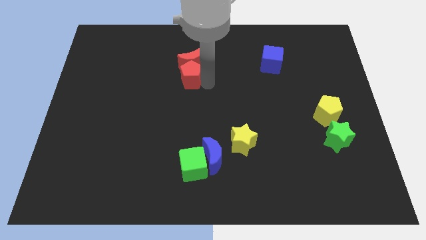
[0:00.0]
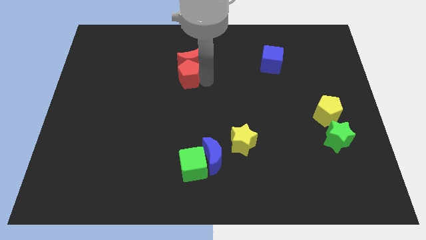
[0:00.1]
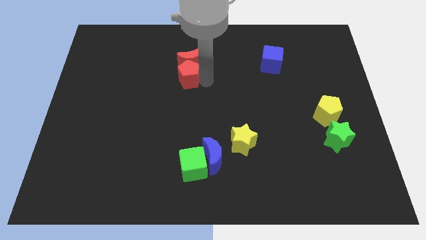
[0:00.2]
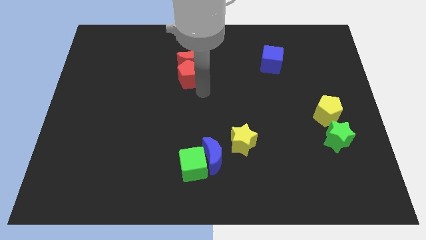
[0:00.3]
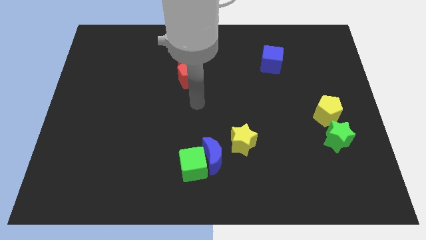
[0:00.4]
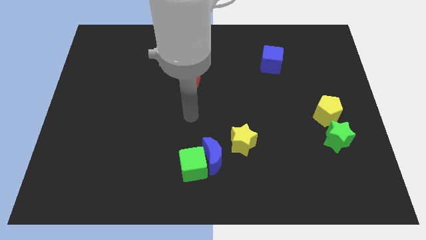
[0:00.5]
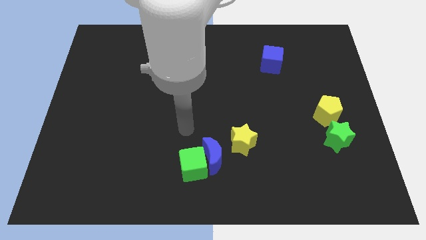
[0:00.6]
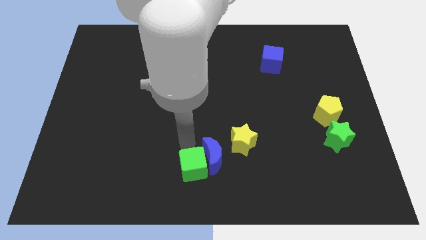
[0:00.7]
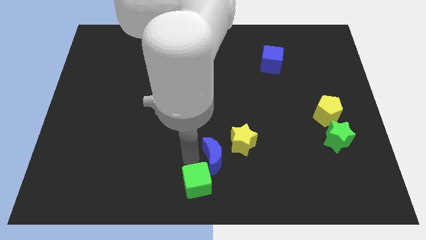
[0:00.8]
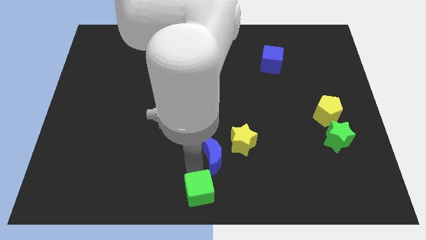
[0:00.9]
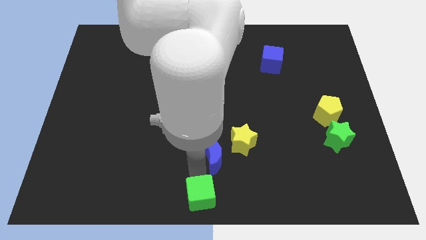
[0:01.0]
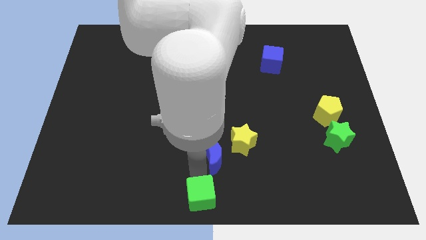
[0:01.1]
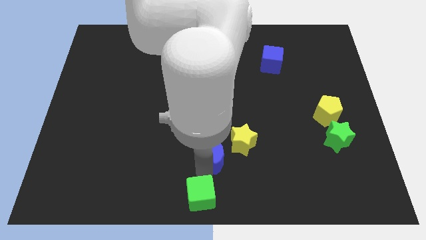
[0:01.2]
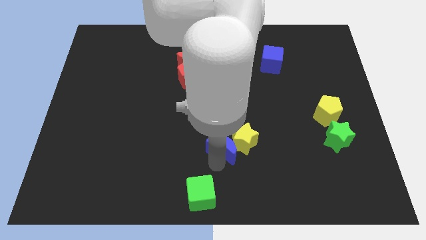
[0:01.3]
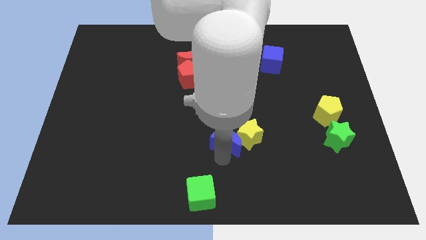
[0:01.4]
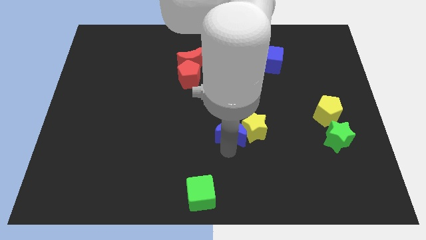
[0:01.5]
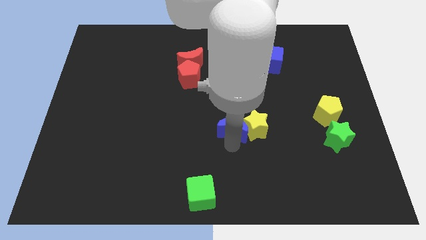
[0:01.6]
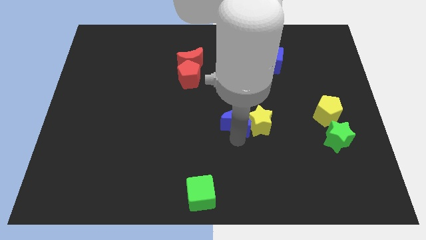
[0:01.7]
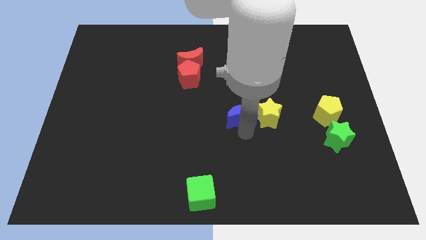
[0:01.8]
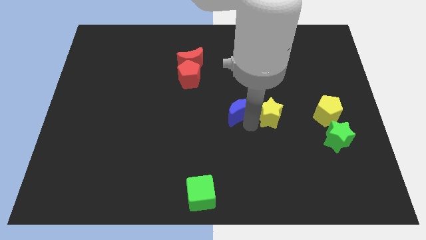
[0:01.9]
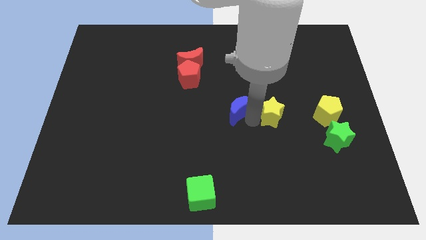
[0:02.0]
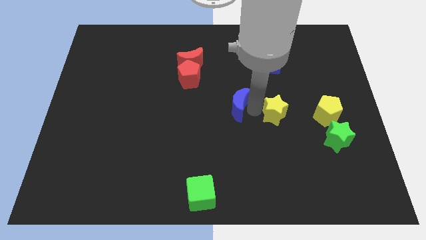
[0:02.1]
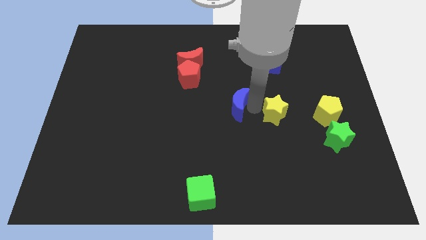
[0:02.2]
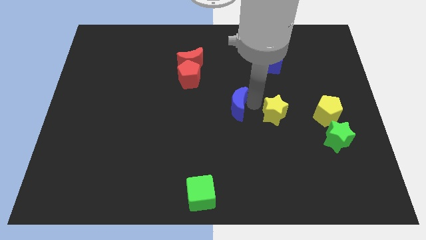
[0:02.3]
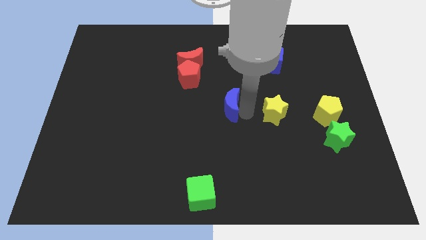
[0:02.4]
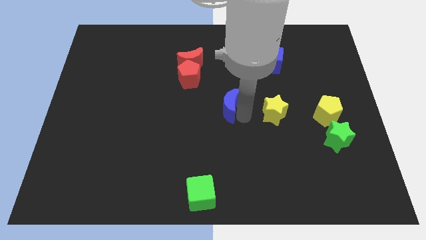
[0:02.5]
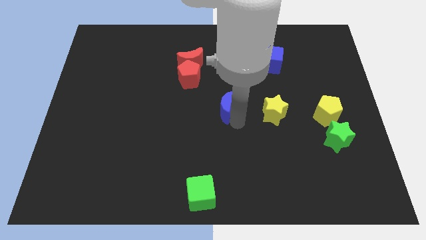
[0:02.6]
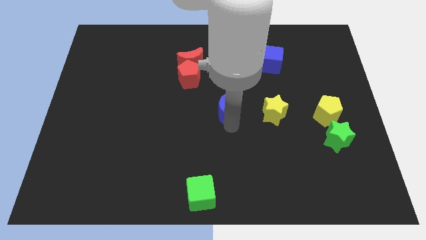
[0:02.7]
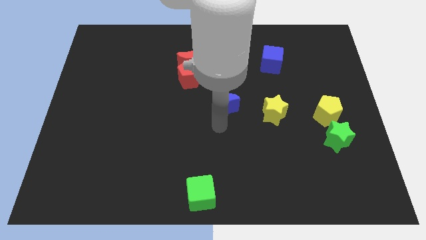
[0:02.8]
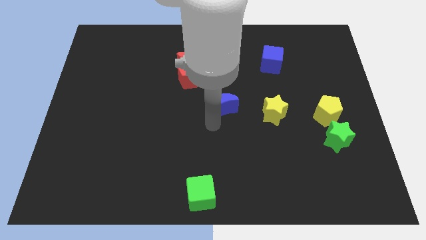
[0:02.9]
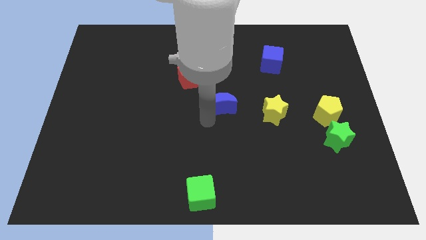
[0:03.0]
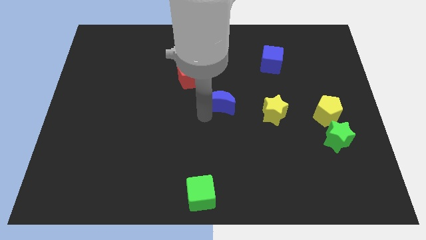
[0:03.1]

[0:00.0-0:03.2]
separate blue crescent from the green cube

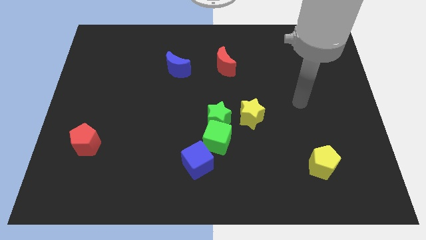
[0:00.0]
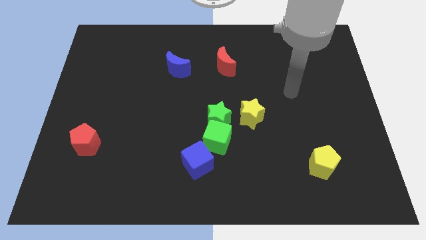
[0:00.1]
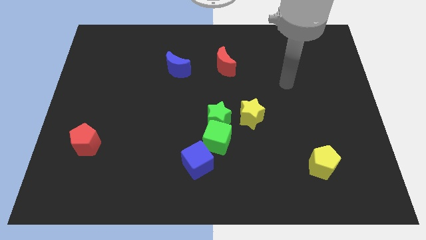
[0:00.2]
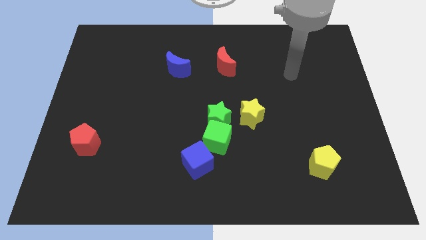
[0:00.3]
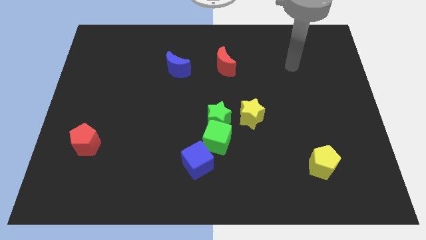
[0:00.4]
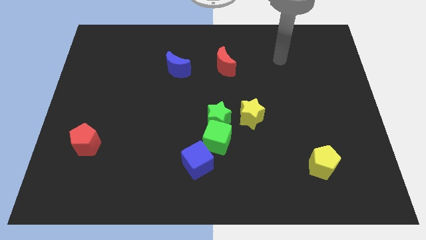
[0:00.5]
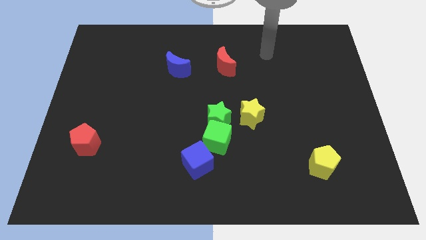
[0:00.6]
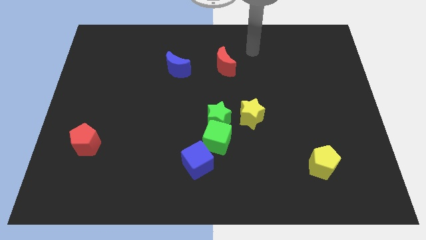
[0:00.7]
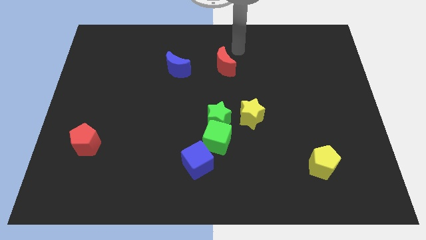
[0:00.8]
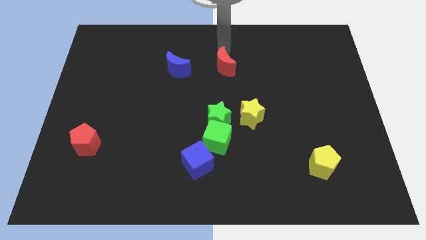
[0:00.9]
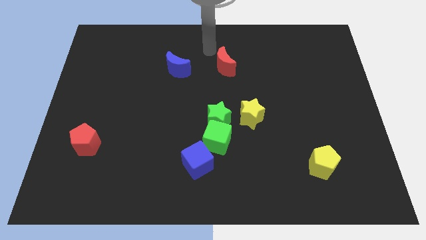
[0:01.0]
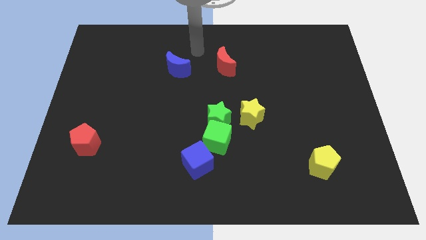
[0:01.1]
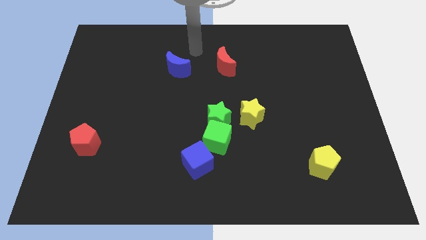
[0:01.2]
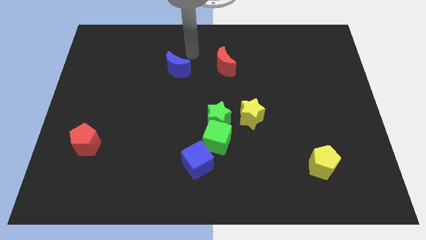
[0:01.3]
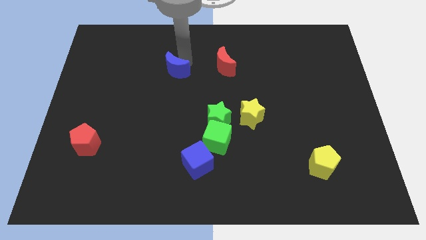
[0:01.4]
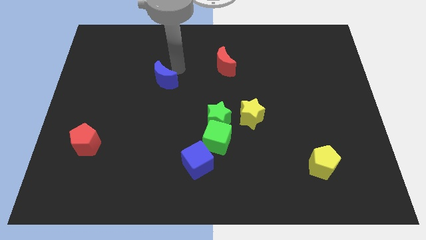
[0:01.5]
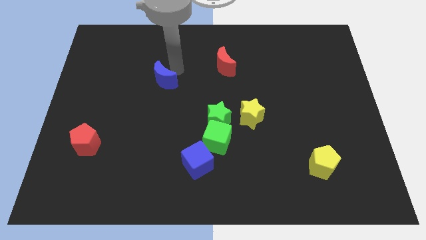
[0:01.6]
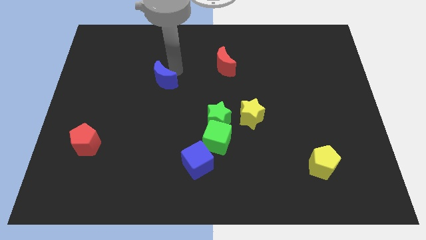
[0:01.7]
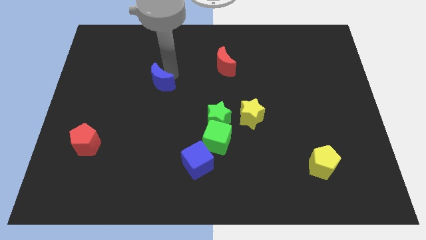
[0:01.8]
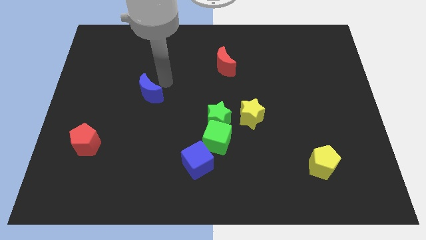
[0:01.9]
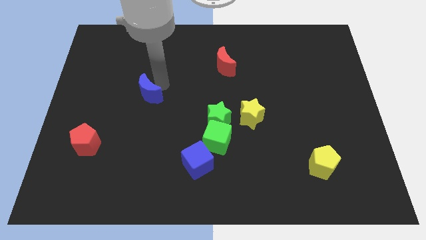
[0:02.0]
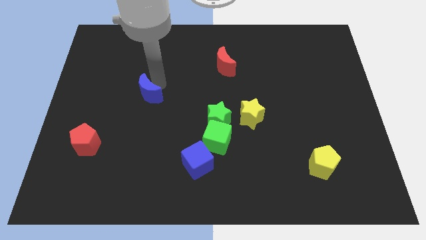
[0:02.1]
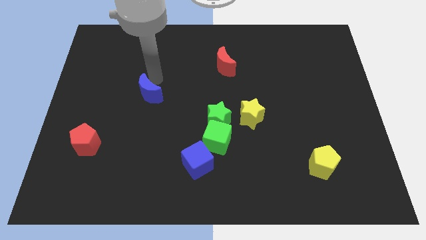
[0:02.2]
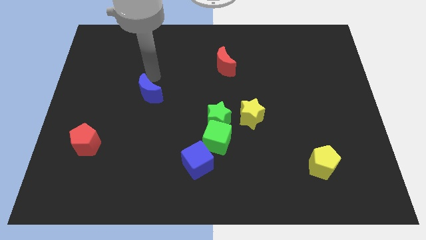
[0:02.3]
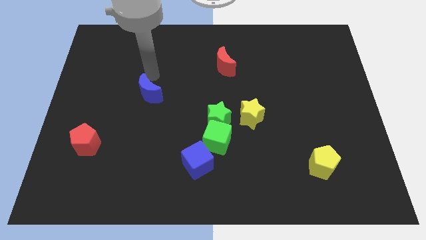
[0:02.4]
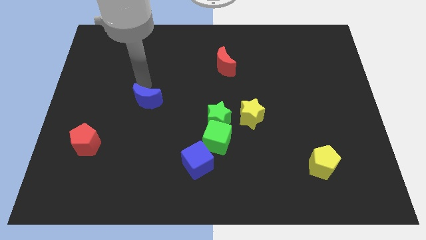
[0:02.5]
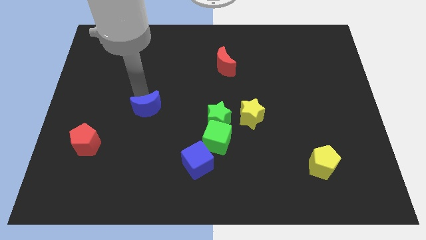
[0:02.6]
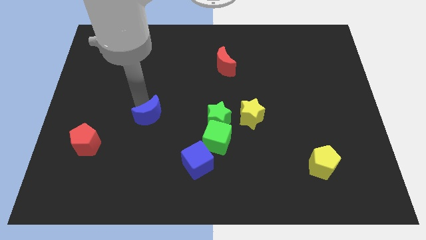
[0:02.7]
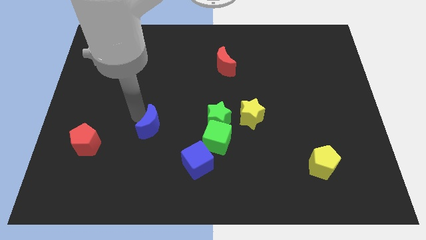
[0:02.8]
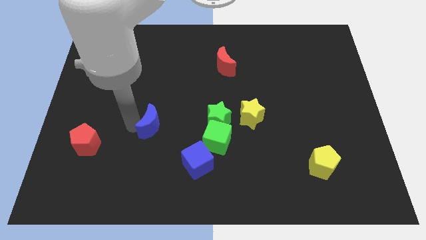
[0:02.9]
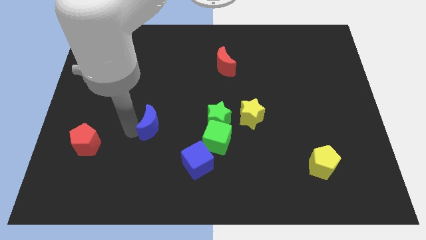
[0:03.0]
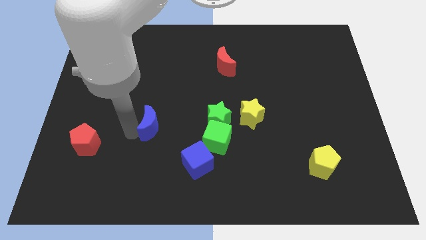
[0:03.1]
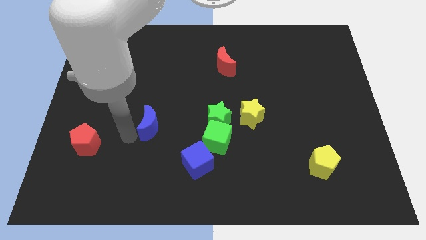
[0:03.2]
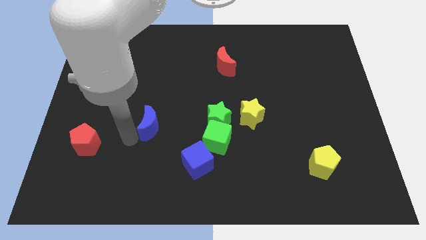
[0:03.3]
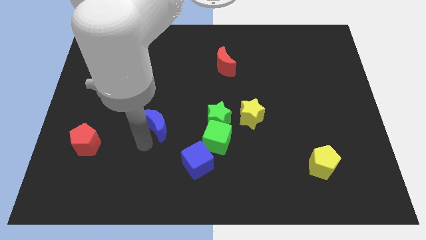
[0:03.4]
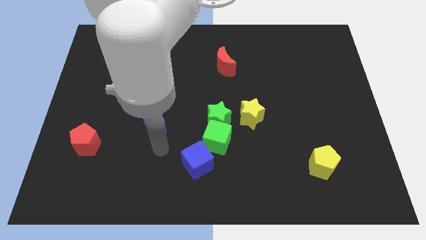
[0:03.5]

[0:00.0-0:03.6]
move the blue moon left to the green cube

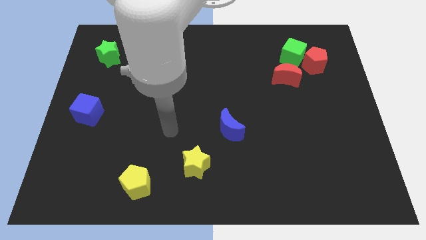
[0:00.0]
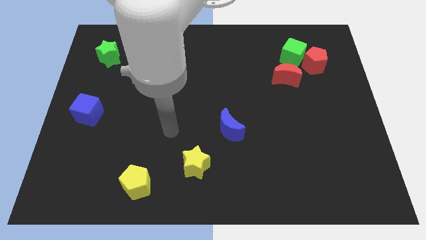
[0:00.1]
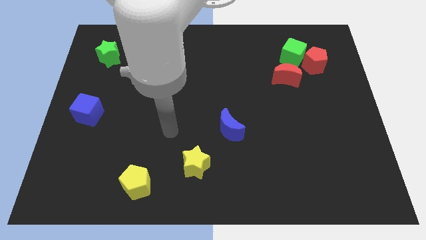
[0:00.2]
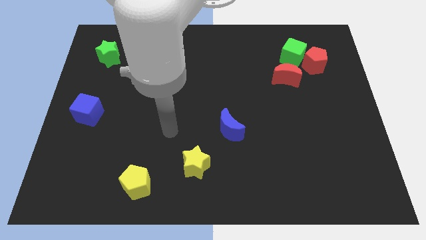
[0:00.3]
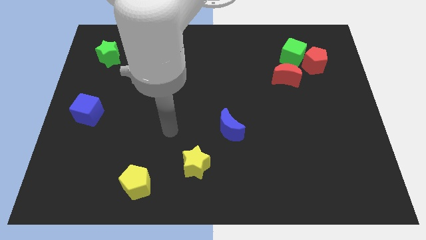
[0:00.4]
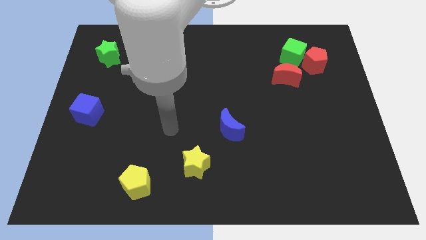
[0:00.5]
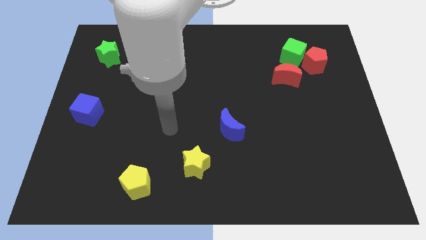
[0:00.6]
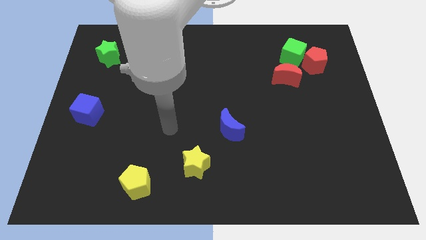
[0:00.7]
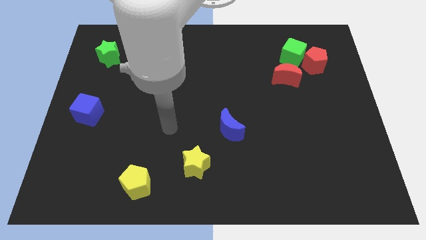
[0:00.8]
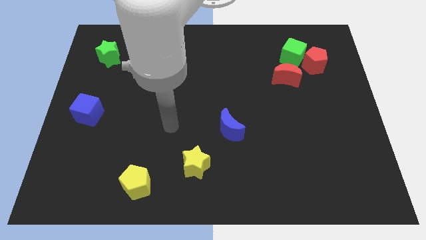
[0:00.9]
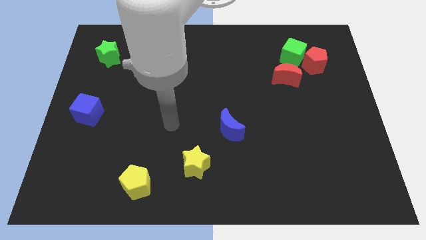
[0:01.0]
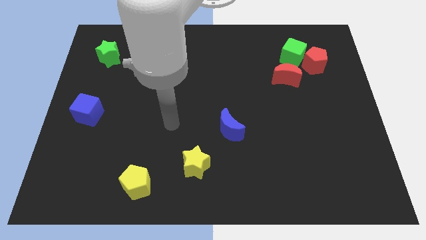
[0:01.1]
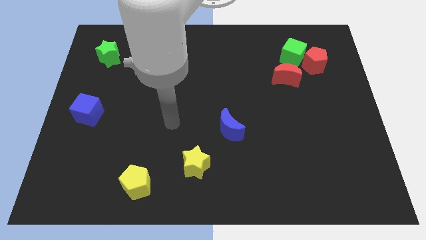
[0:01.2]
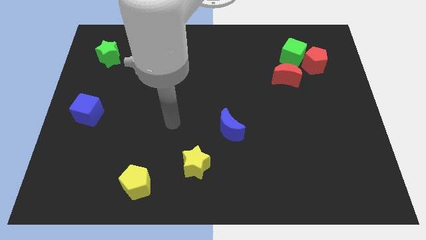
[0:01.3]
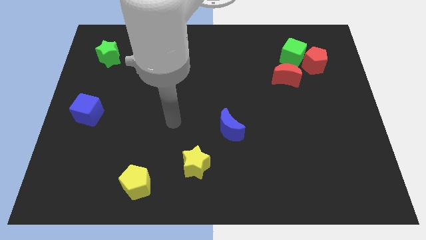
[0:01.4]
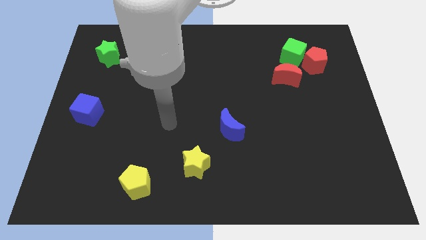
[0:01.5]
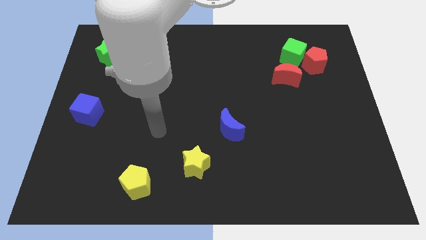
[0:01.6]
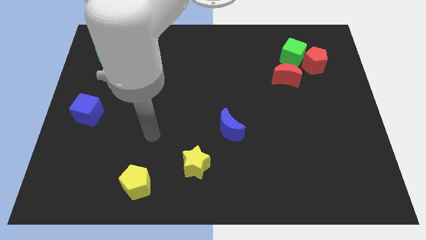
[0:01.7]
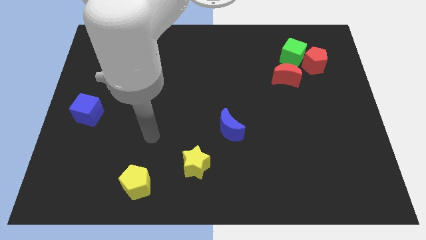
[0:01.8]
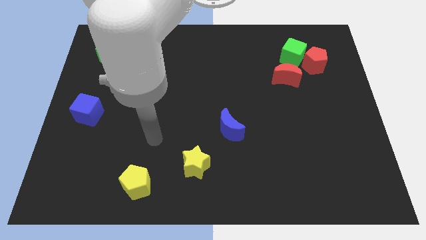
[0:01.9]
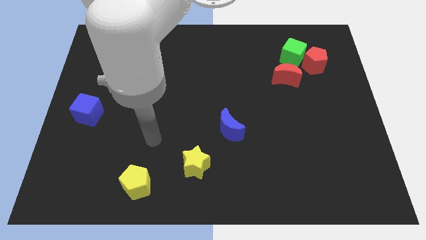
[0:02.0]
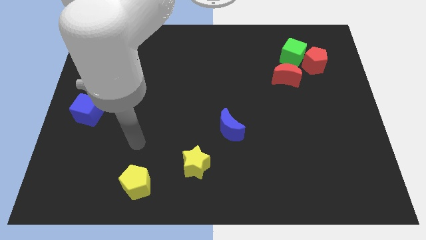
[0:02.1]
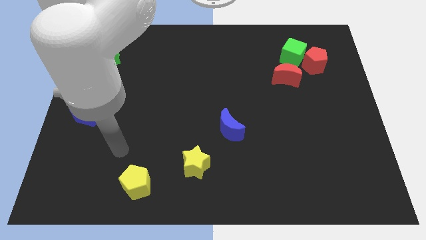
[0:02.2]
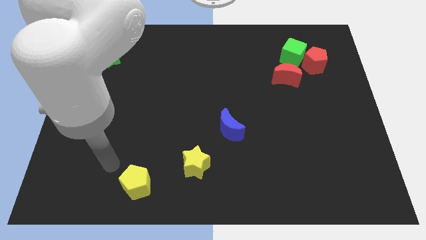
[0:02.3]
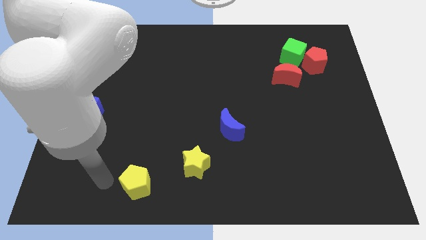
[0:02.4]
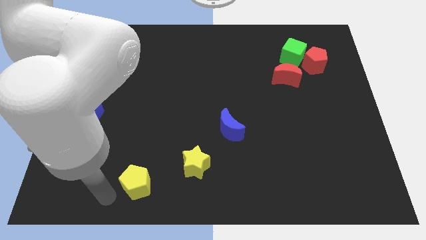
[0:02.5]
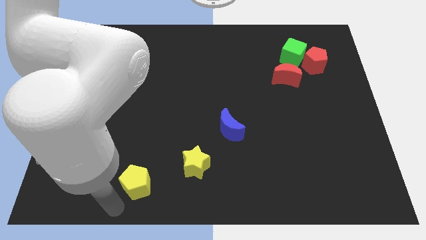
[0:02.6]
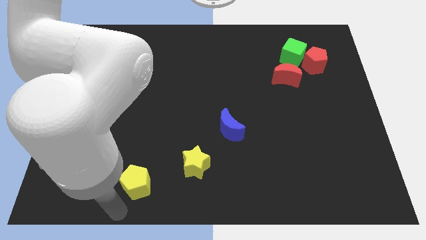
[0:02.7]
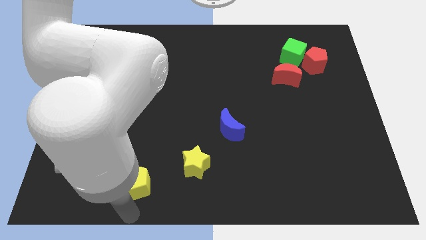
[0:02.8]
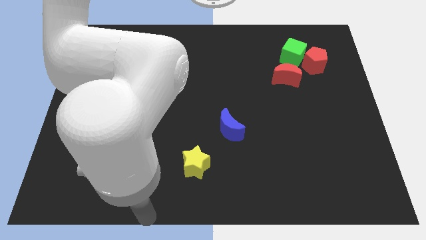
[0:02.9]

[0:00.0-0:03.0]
place your arm at the bottom of the yellow pentagon
